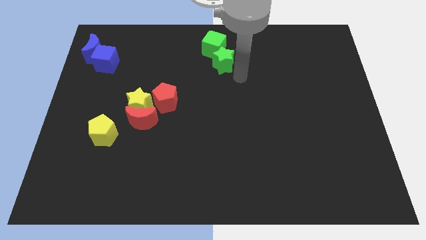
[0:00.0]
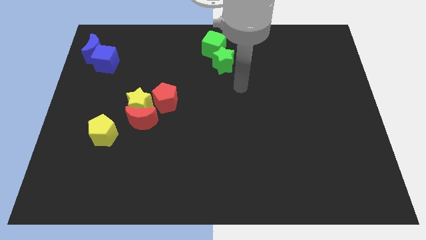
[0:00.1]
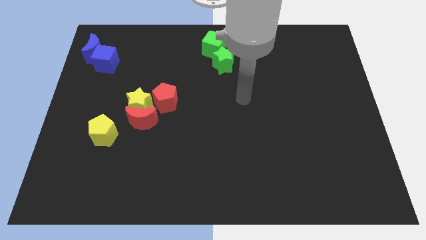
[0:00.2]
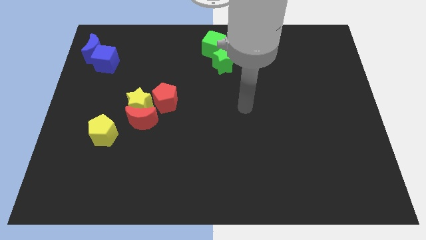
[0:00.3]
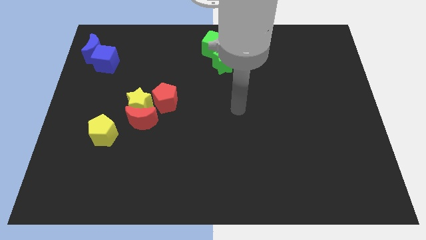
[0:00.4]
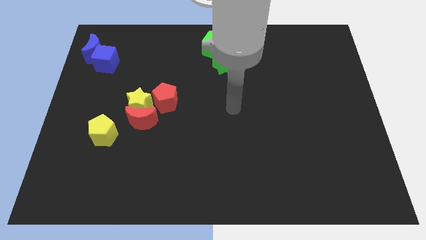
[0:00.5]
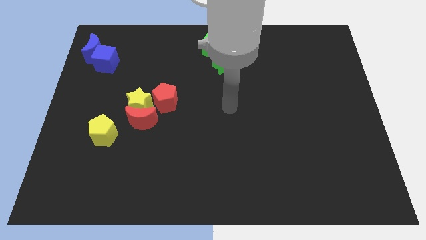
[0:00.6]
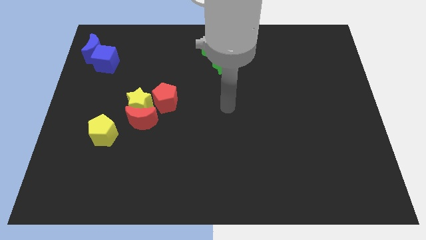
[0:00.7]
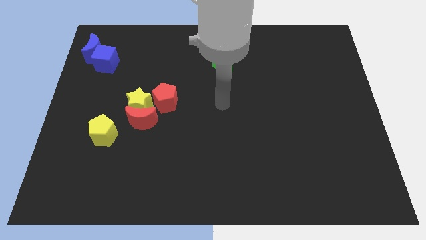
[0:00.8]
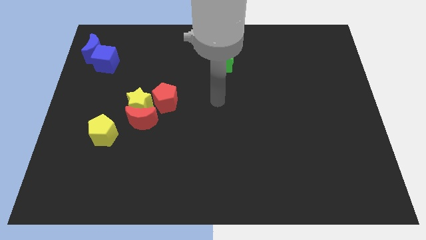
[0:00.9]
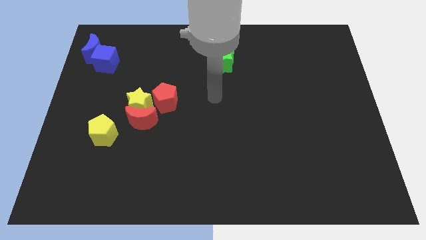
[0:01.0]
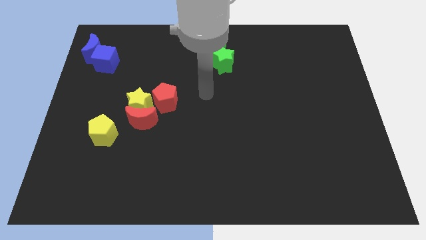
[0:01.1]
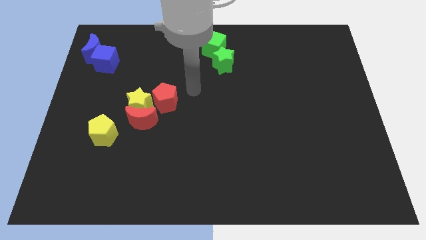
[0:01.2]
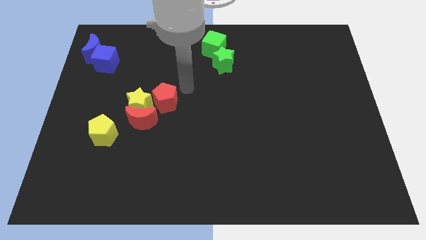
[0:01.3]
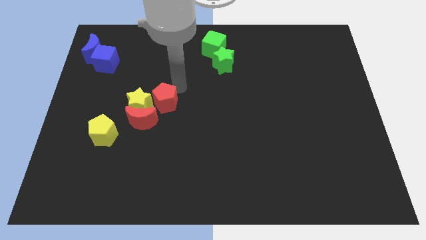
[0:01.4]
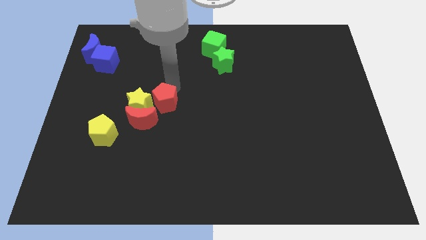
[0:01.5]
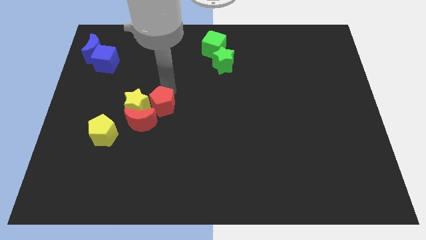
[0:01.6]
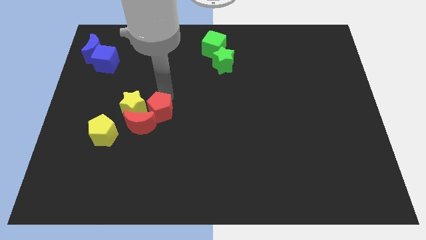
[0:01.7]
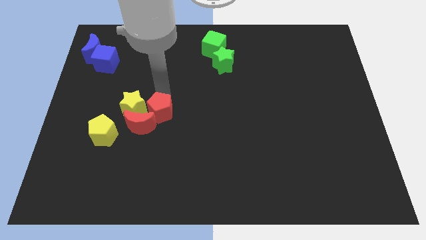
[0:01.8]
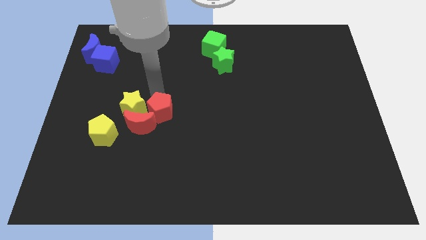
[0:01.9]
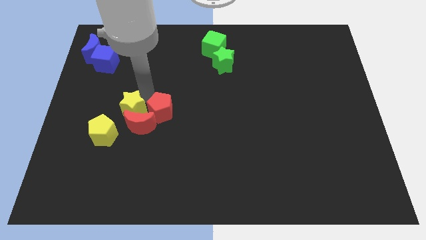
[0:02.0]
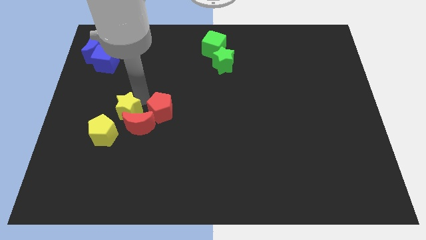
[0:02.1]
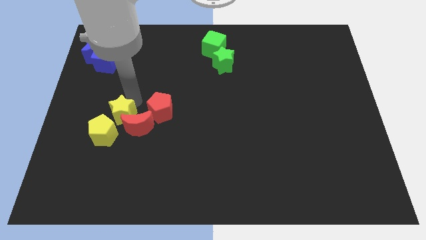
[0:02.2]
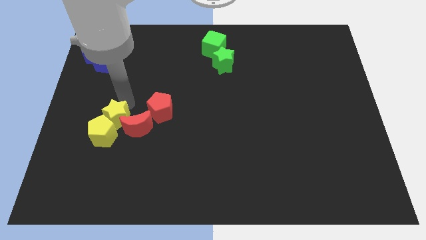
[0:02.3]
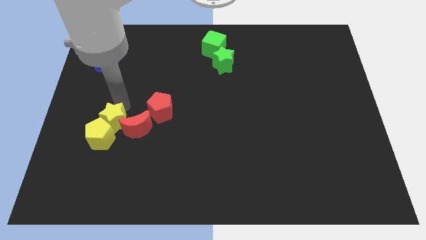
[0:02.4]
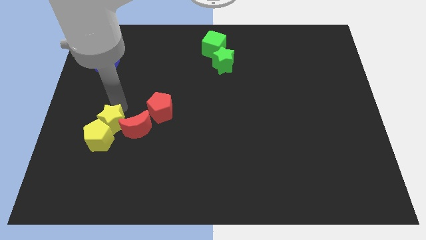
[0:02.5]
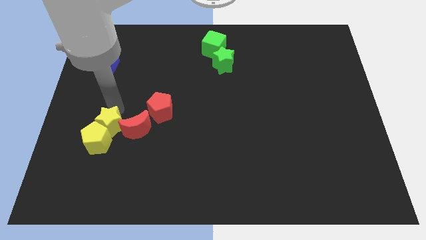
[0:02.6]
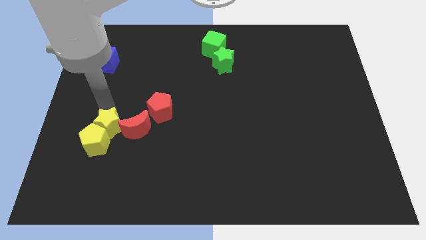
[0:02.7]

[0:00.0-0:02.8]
point your arm above yellow star

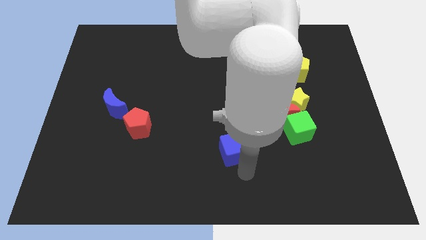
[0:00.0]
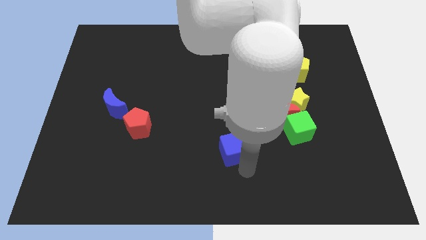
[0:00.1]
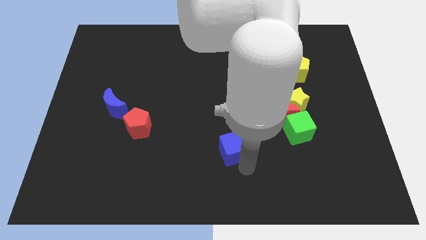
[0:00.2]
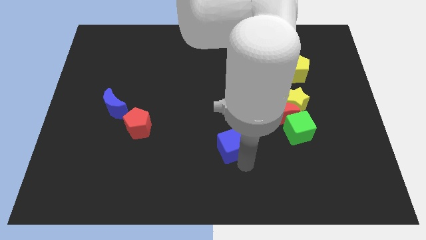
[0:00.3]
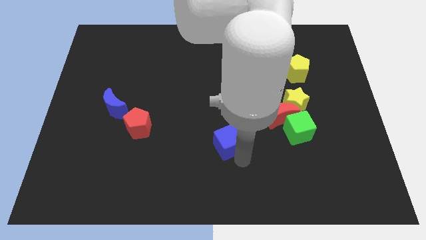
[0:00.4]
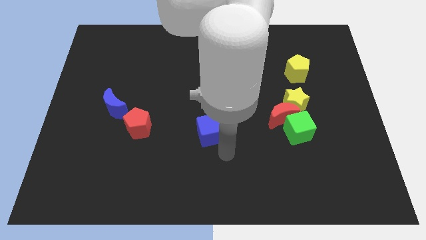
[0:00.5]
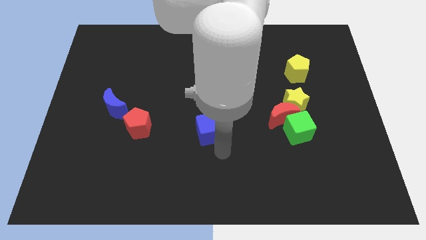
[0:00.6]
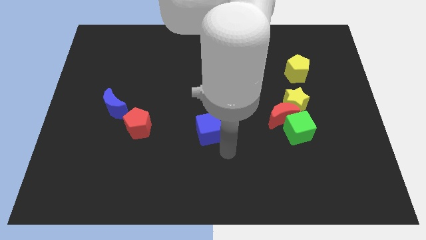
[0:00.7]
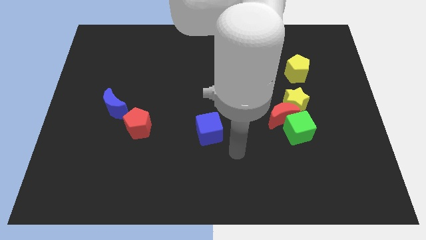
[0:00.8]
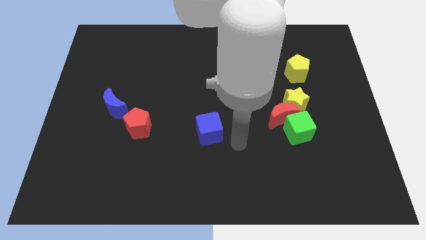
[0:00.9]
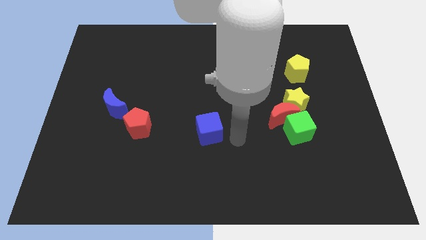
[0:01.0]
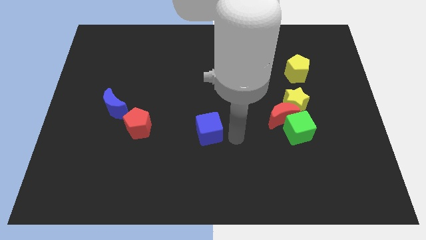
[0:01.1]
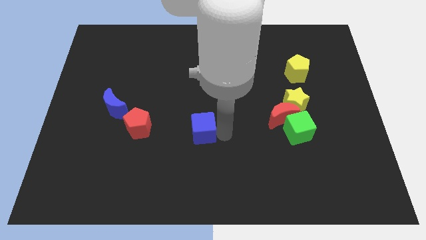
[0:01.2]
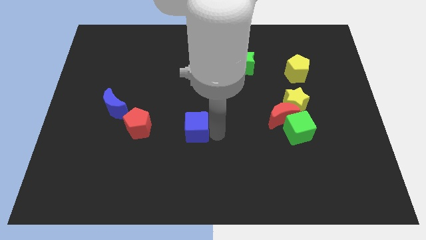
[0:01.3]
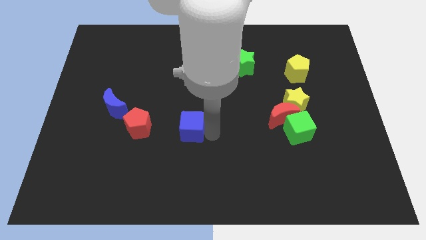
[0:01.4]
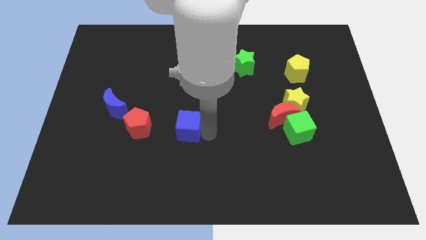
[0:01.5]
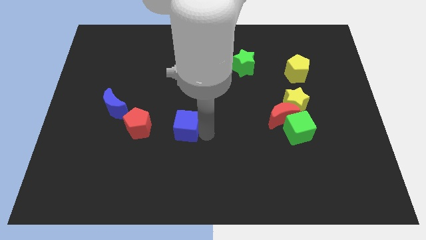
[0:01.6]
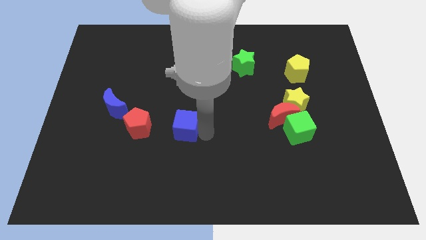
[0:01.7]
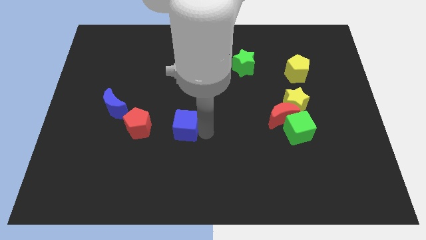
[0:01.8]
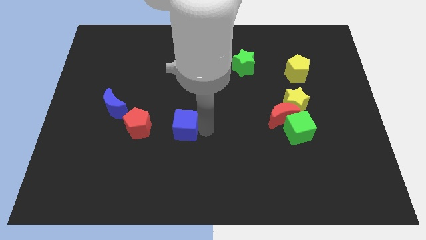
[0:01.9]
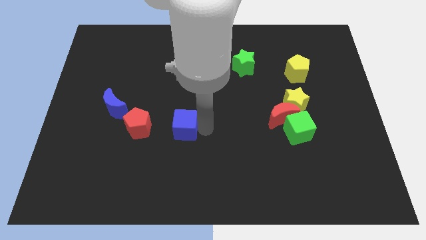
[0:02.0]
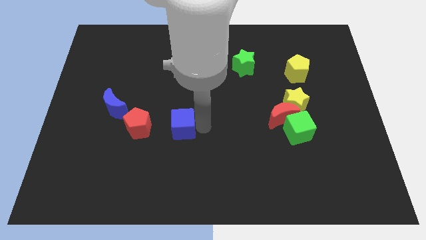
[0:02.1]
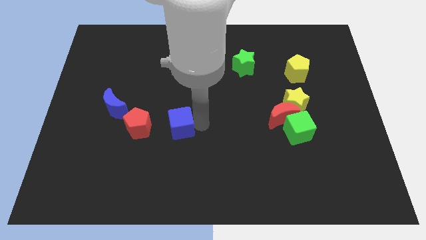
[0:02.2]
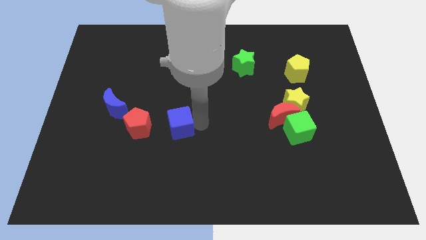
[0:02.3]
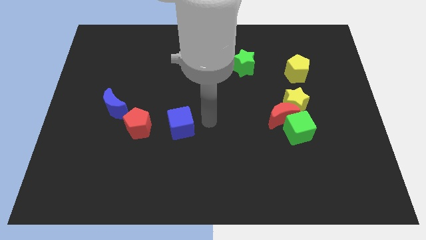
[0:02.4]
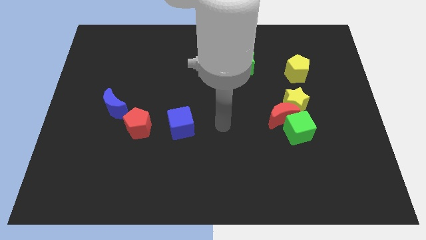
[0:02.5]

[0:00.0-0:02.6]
push the blue cube towards the red pentagon

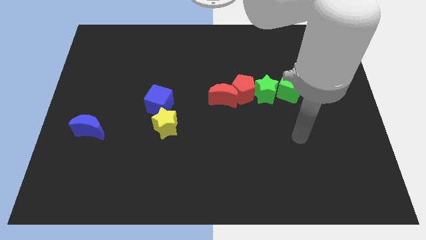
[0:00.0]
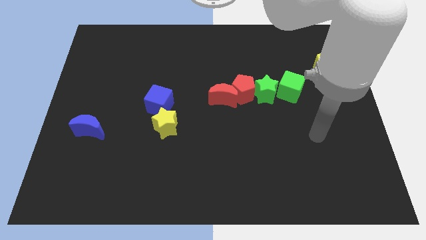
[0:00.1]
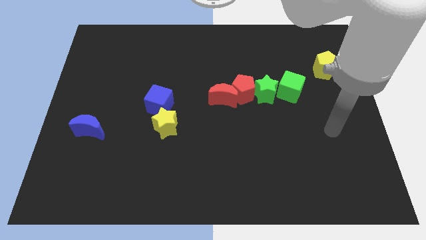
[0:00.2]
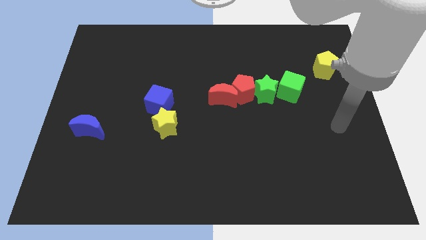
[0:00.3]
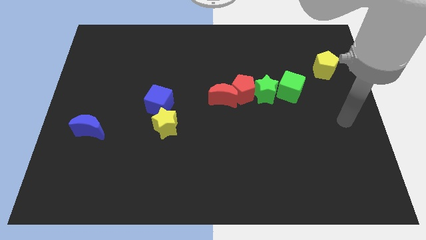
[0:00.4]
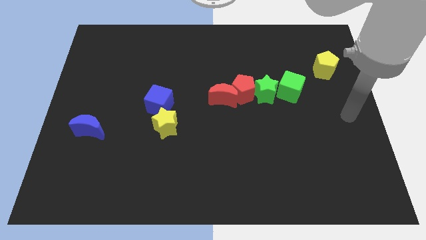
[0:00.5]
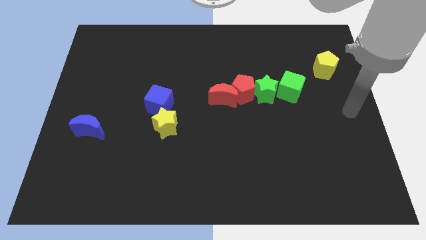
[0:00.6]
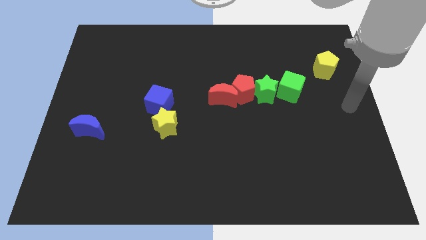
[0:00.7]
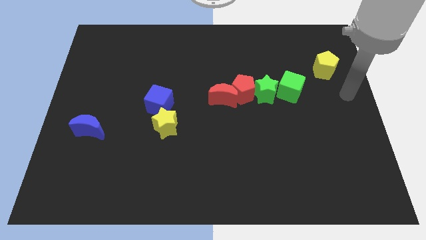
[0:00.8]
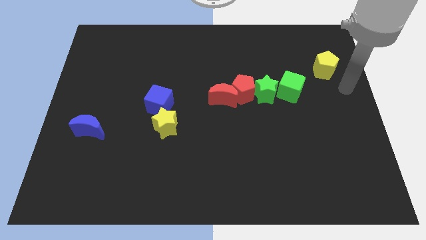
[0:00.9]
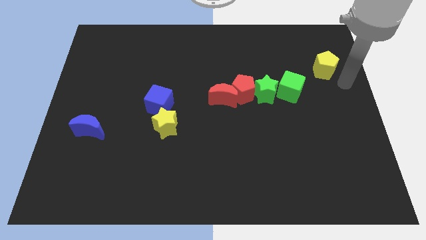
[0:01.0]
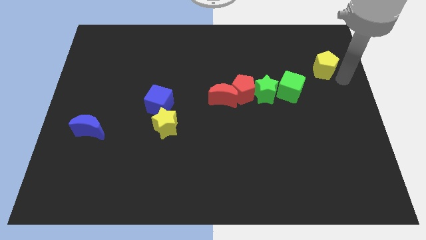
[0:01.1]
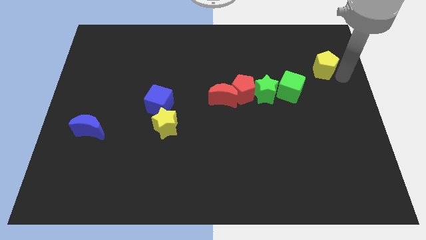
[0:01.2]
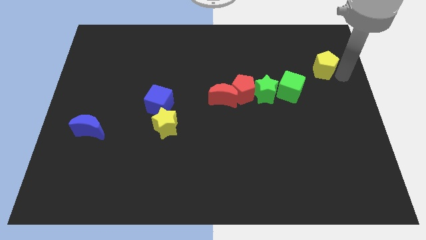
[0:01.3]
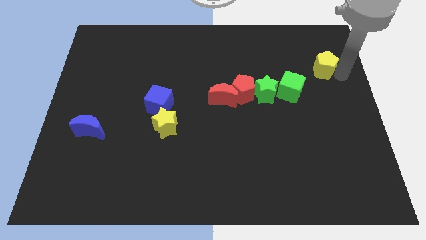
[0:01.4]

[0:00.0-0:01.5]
touch the right side of the yellow pentagon

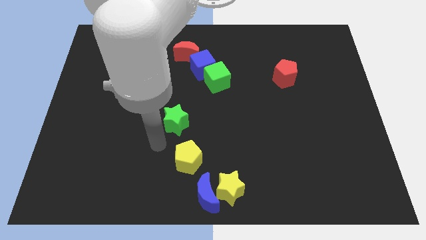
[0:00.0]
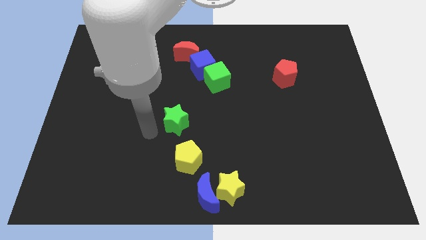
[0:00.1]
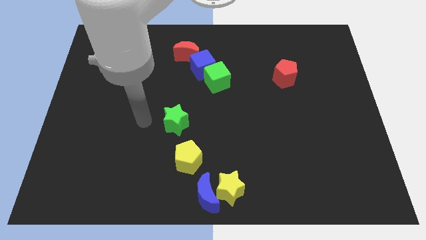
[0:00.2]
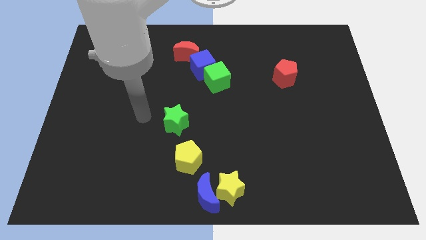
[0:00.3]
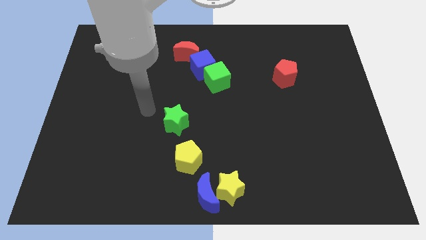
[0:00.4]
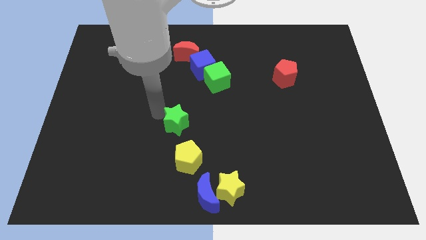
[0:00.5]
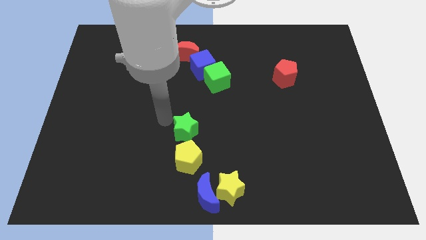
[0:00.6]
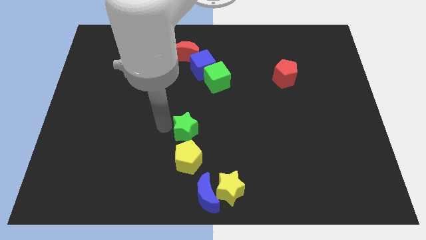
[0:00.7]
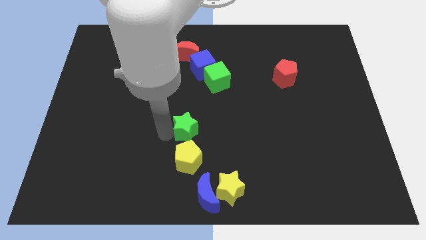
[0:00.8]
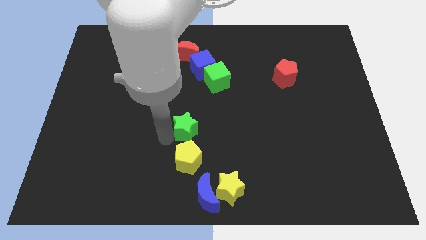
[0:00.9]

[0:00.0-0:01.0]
place the green star at the top of yellow pentagon

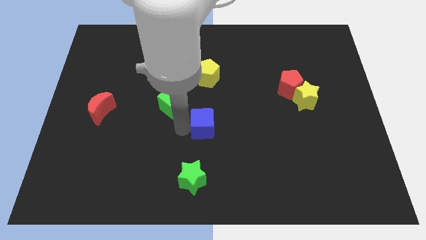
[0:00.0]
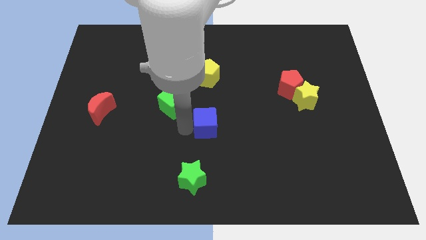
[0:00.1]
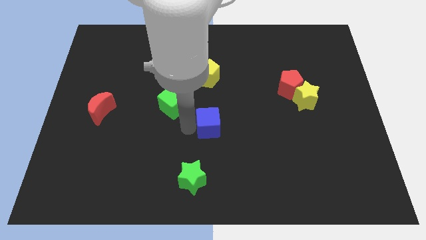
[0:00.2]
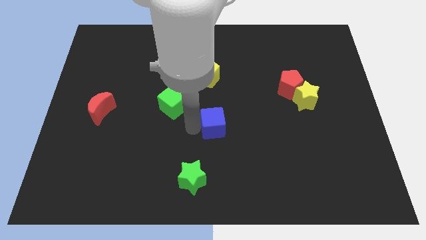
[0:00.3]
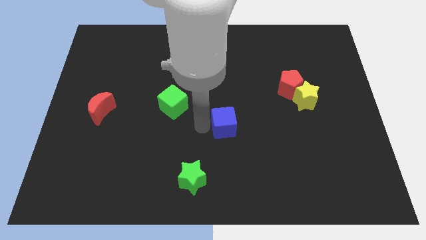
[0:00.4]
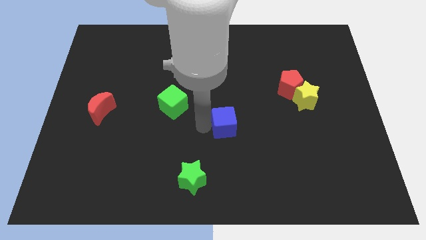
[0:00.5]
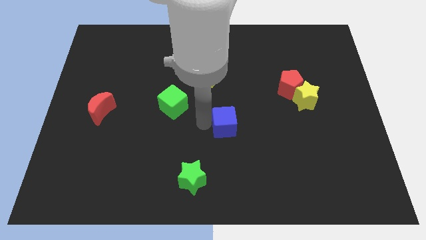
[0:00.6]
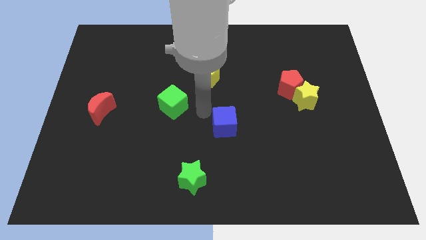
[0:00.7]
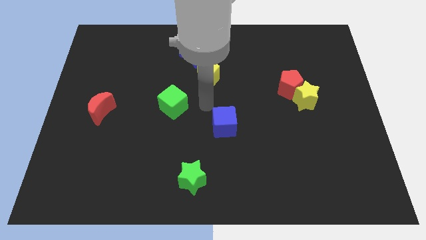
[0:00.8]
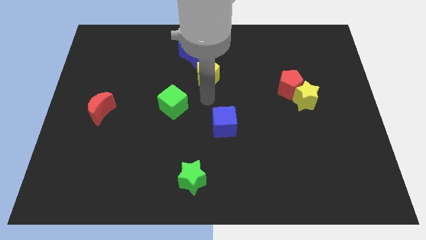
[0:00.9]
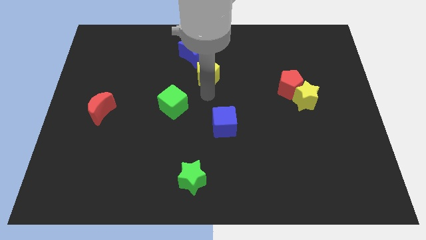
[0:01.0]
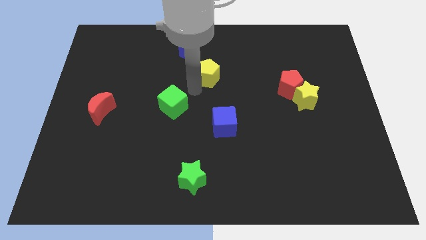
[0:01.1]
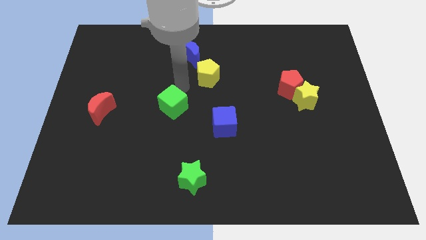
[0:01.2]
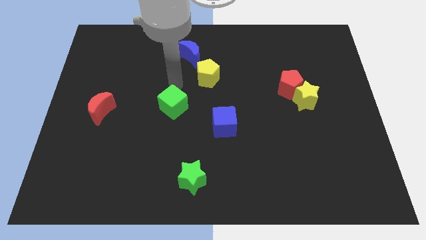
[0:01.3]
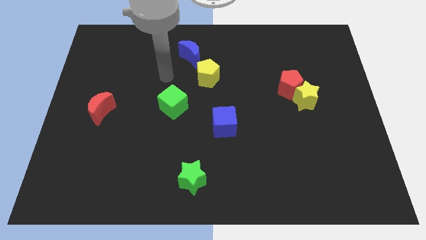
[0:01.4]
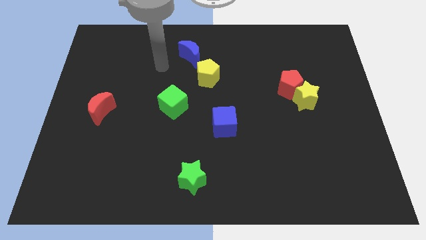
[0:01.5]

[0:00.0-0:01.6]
slightly move the blue cube towards right
